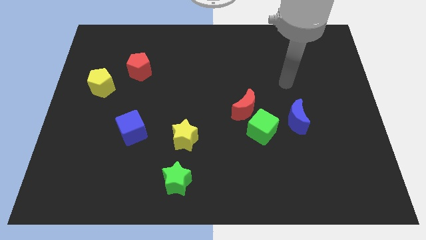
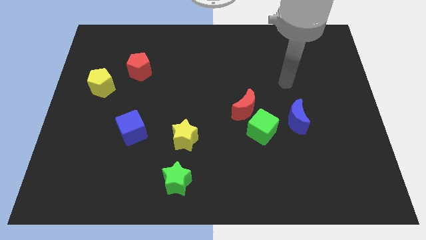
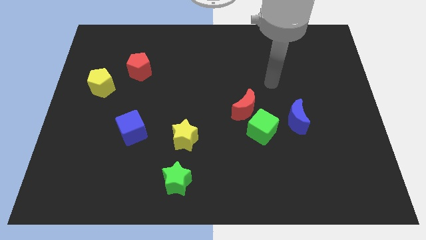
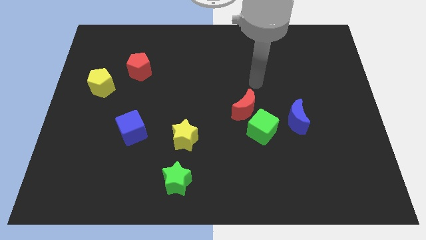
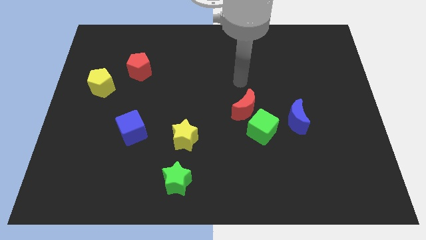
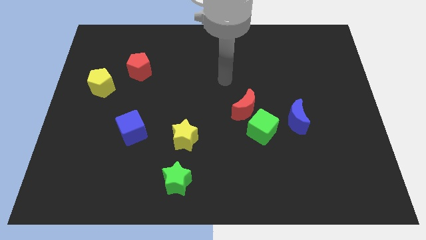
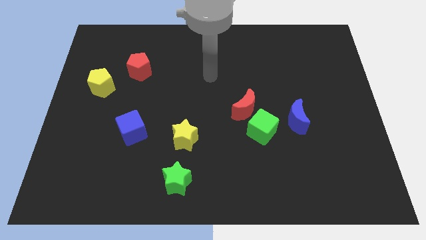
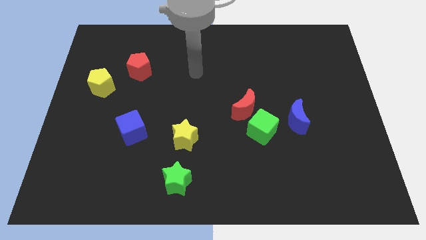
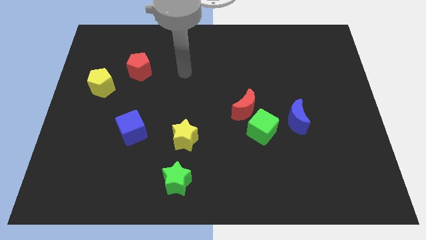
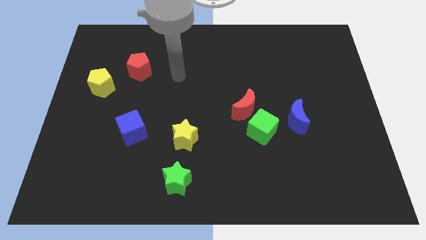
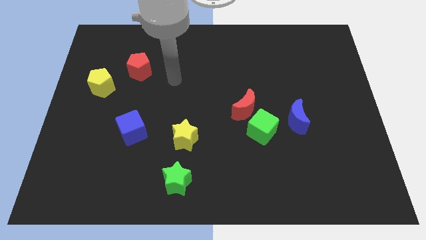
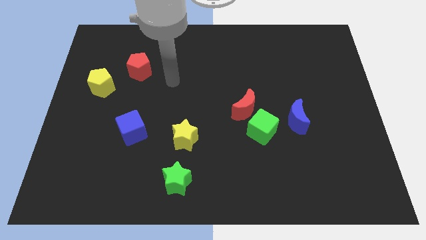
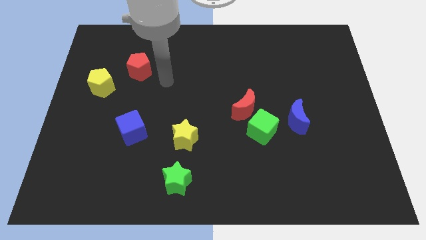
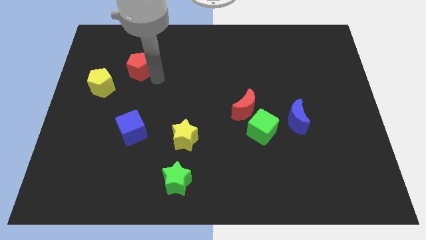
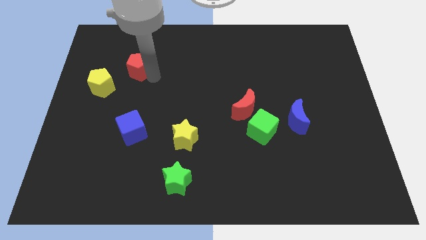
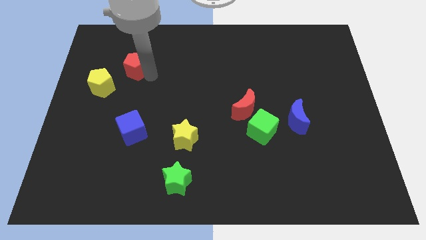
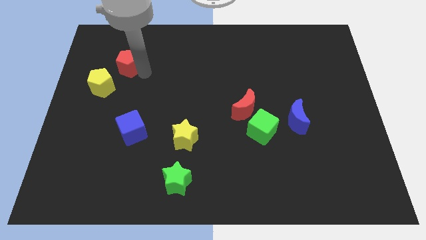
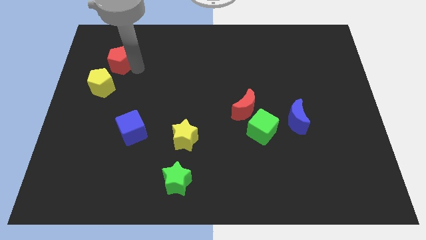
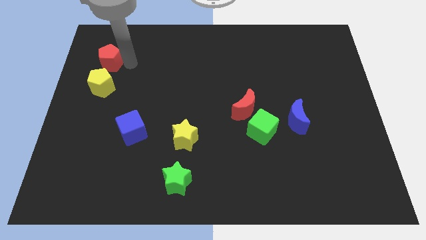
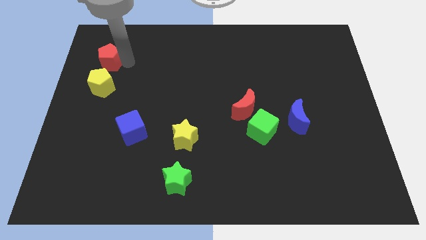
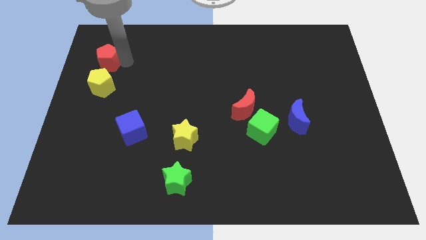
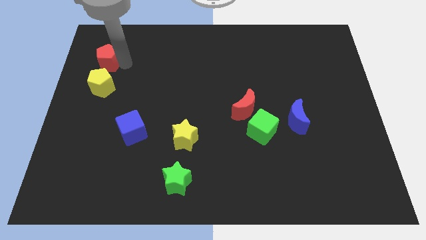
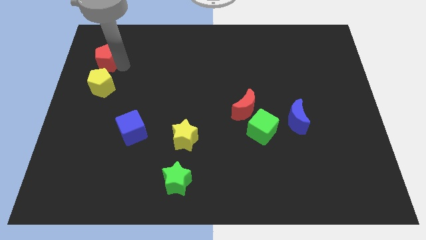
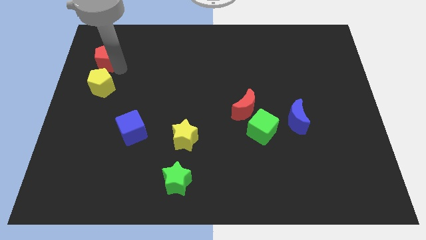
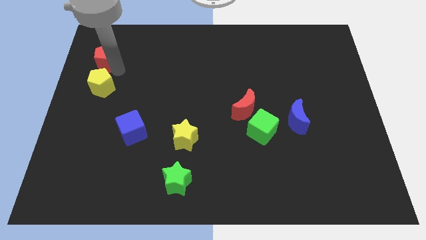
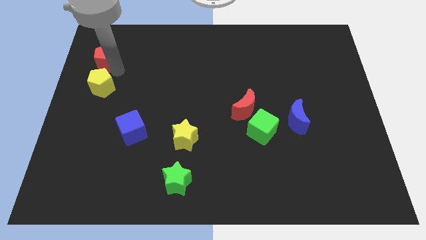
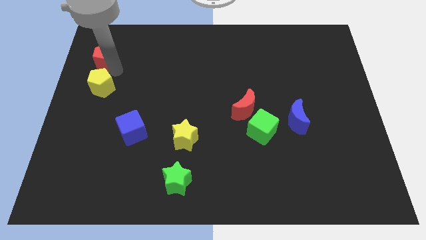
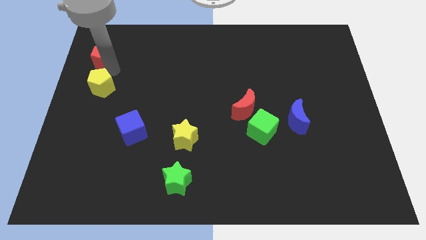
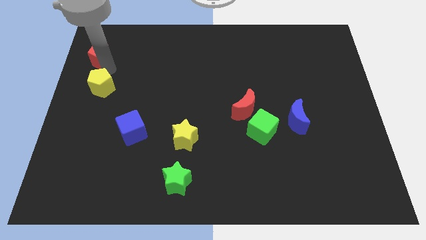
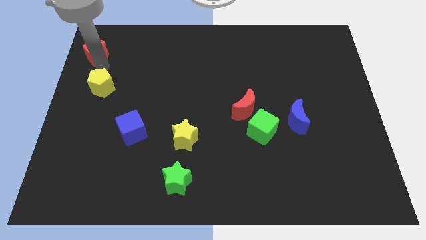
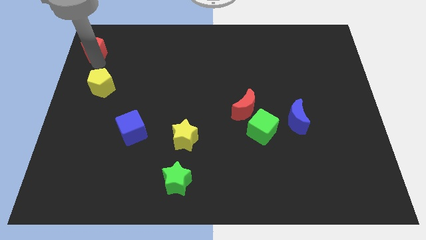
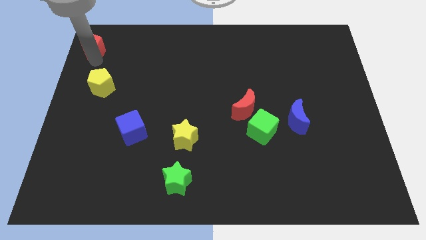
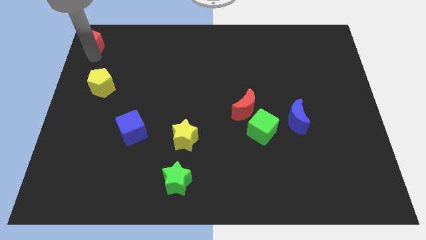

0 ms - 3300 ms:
slide the red pentagon towards the top left corner

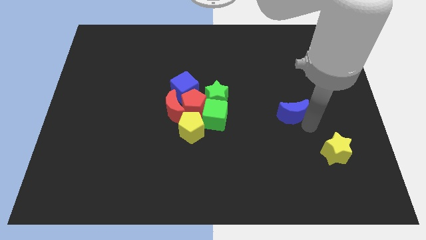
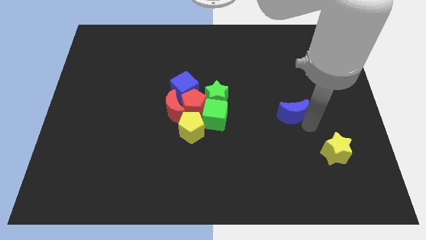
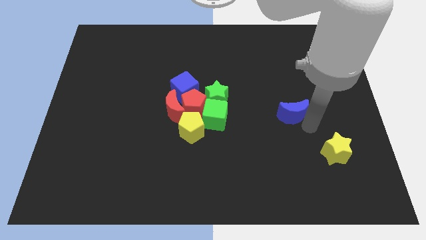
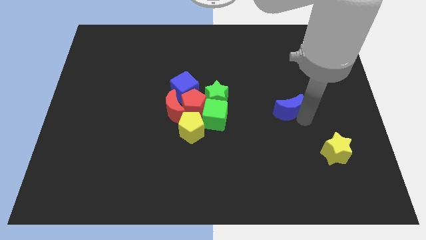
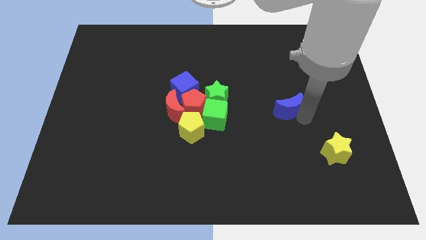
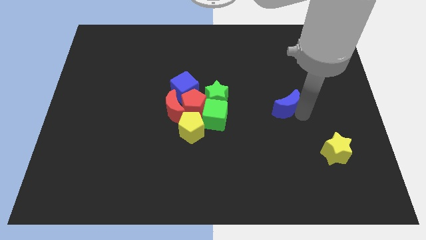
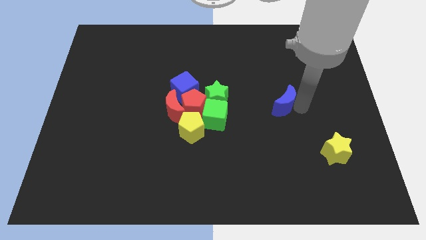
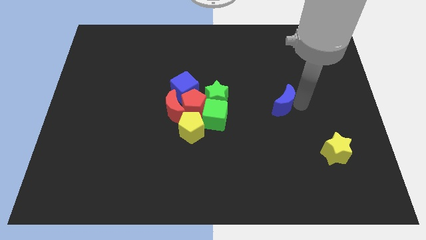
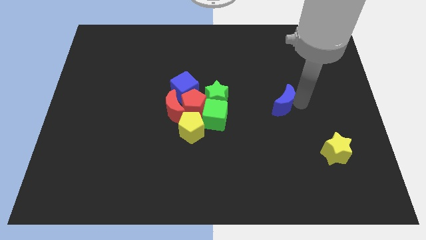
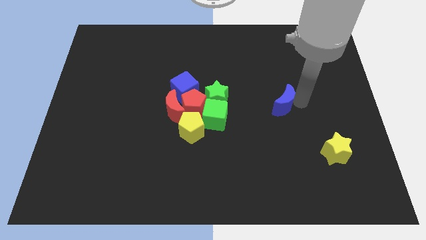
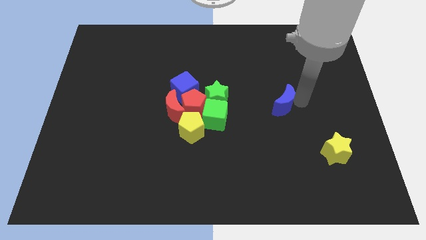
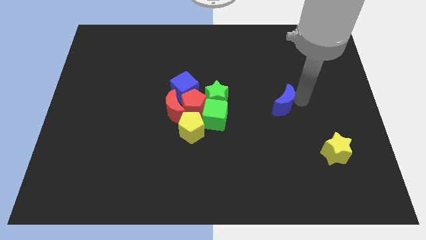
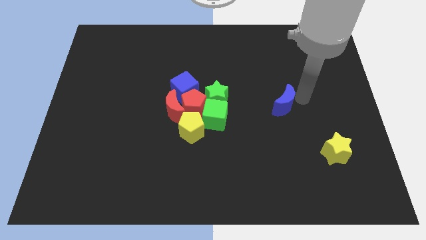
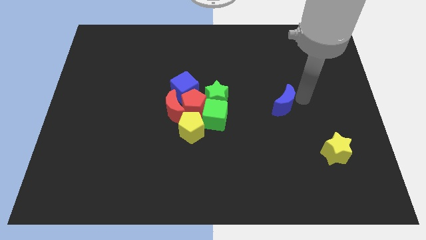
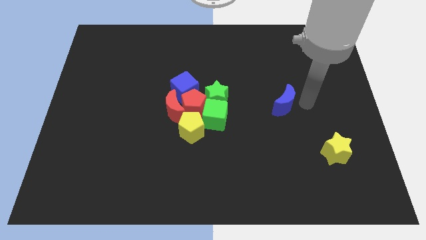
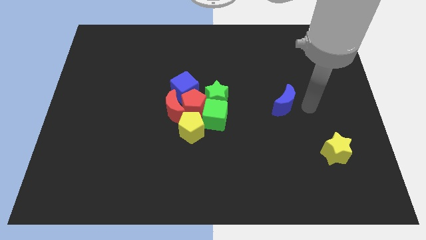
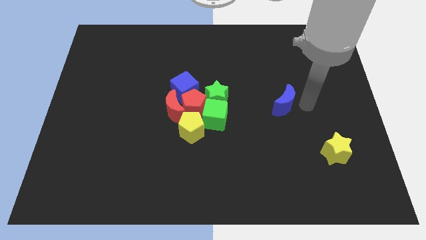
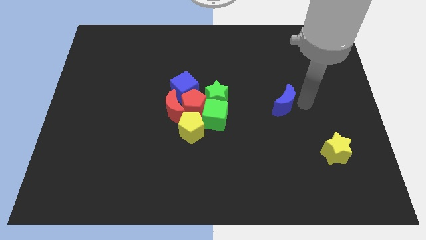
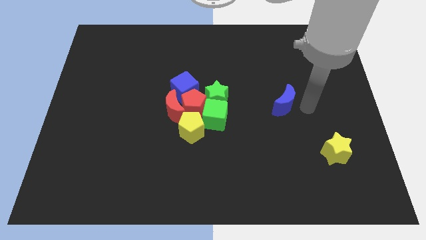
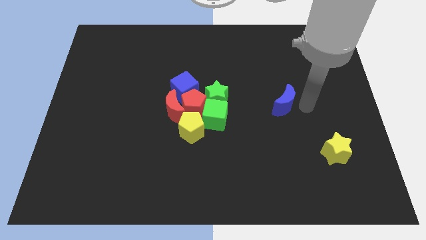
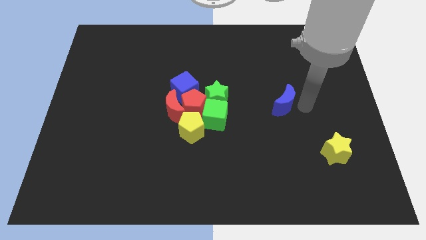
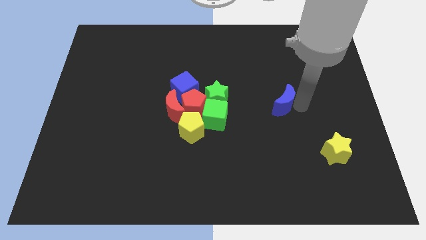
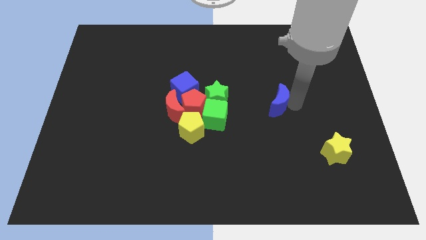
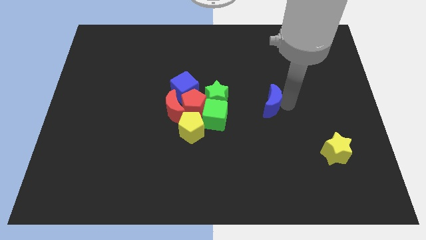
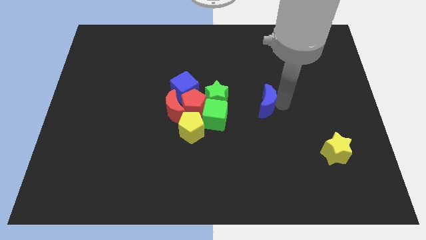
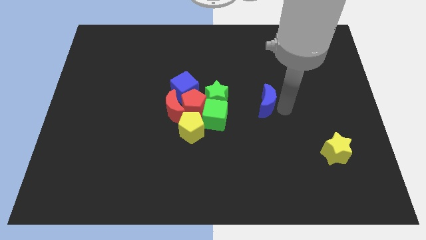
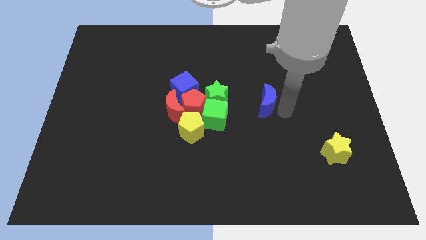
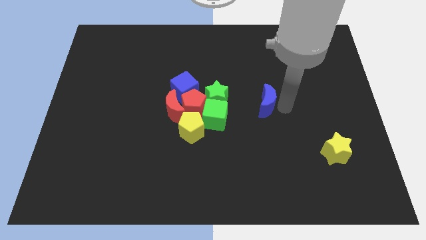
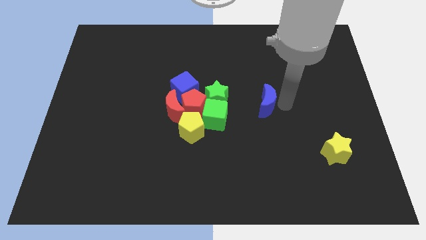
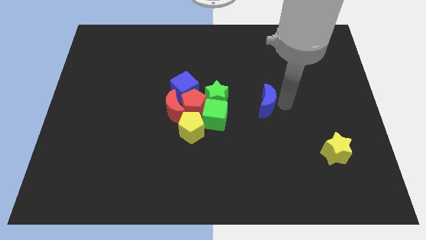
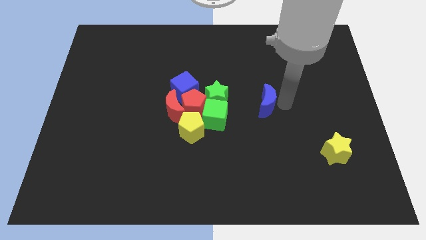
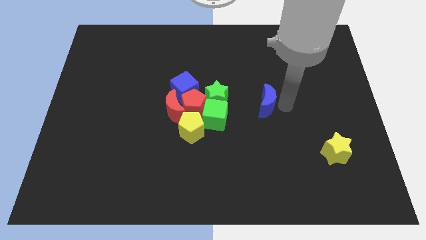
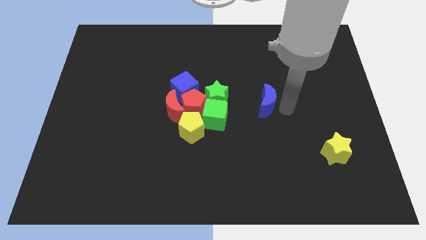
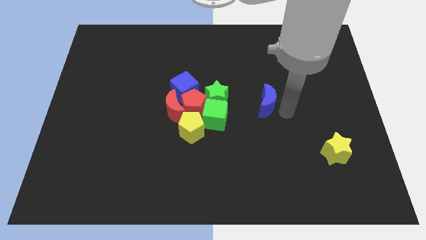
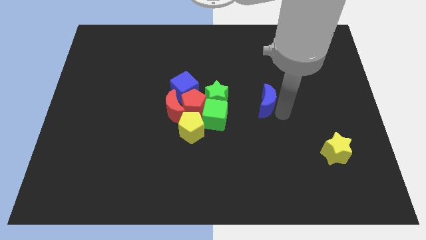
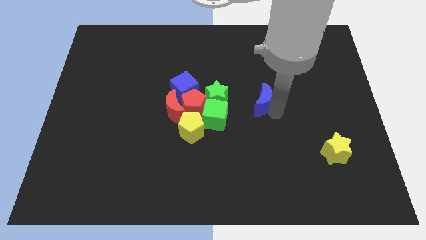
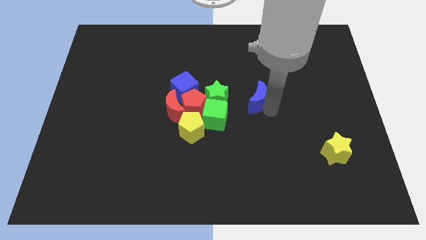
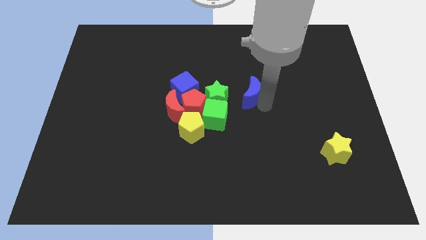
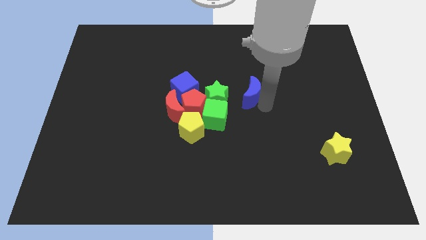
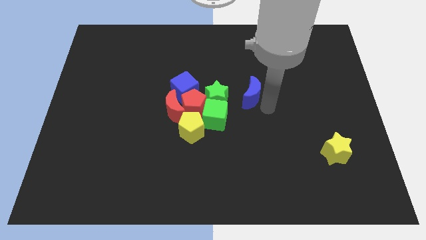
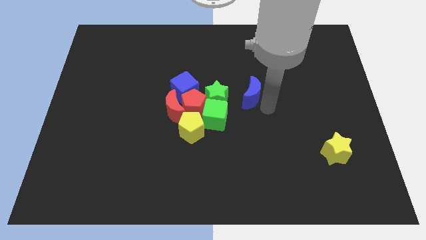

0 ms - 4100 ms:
push the blue crescent towards the center of the board

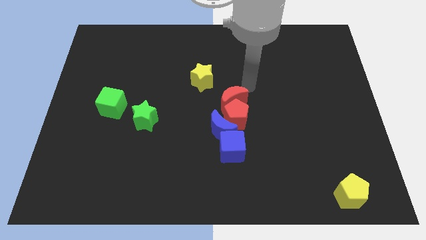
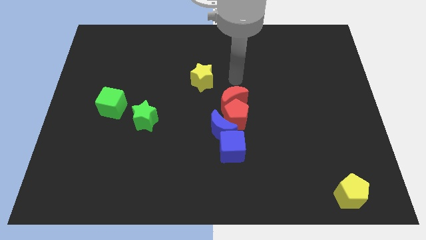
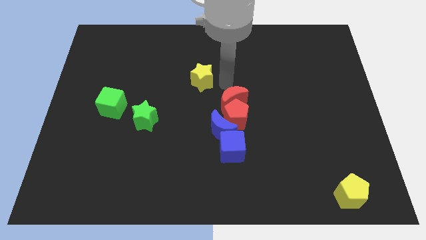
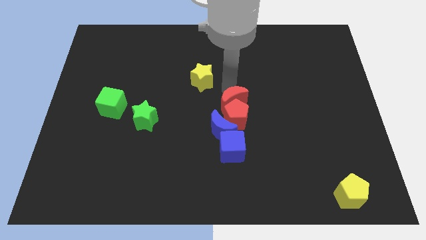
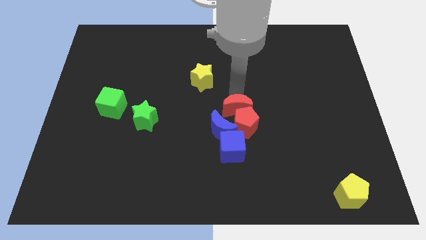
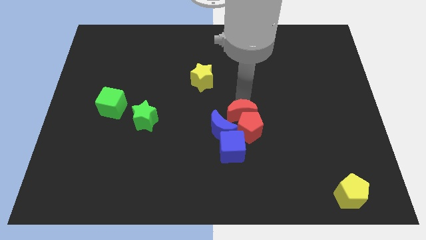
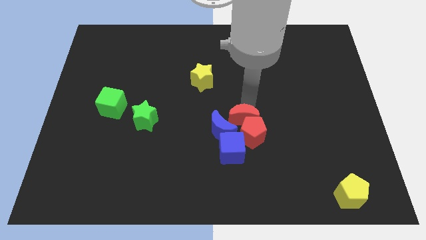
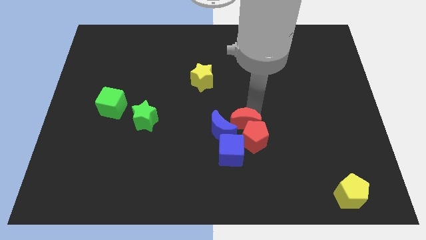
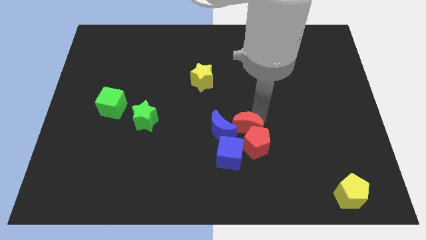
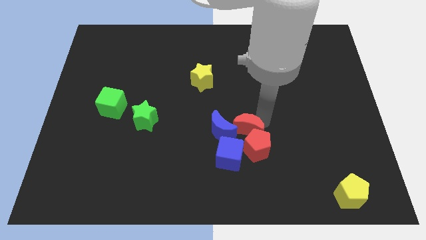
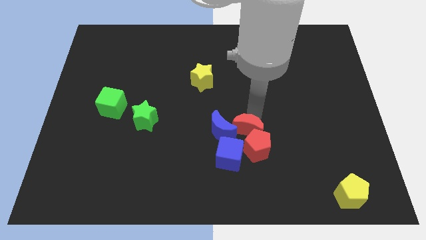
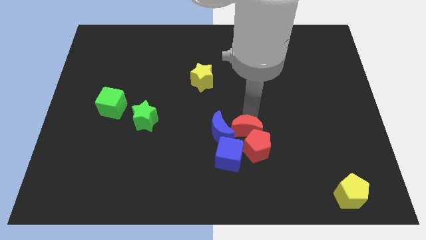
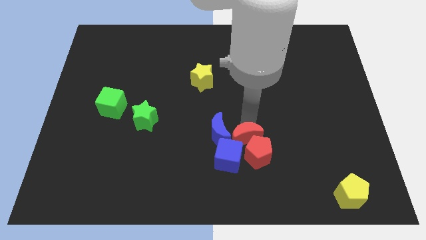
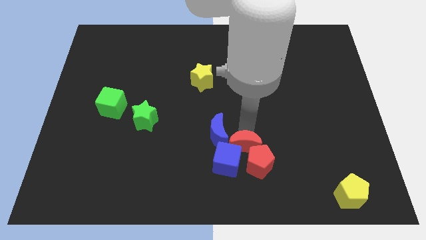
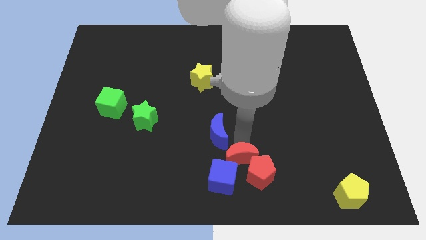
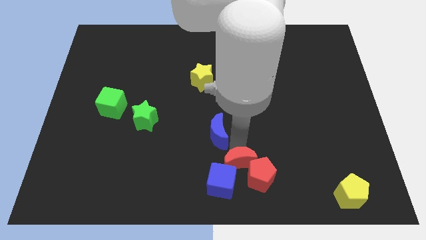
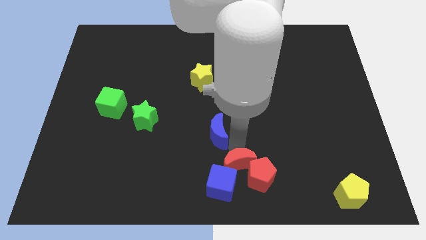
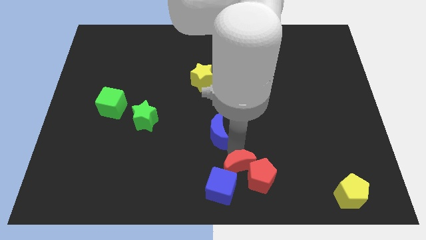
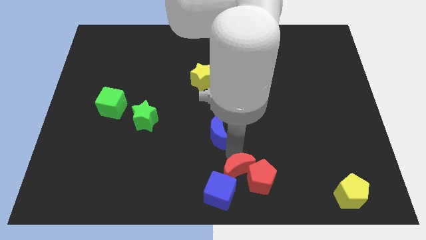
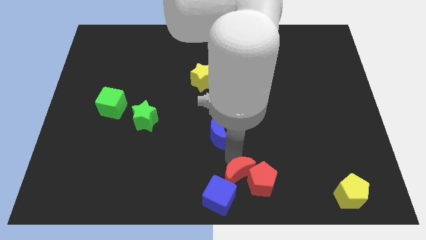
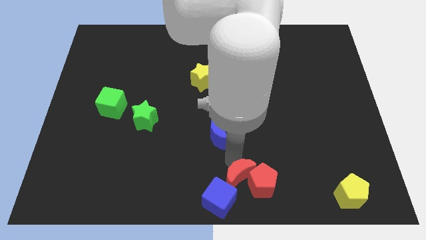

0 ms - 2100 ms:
push red blocks and blue cube to the bottom center
